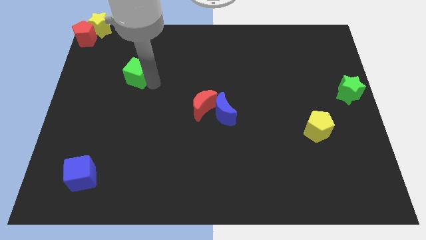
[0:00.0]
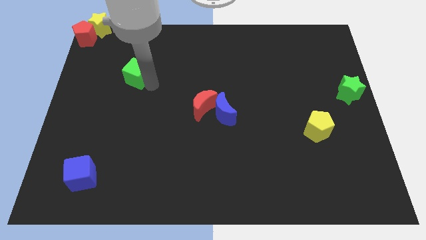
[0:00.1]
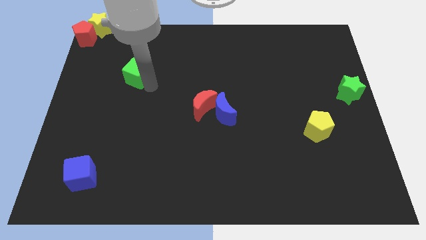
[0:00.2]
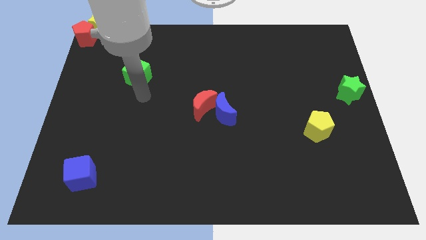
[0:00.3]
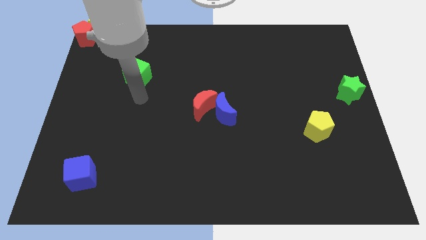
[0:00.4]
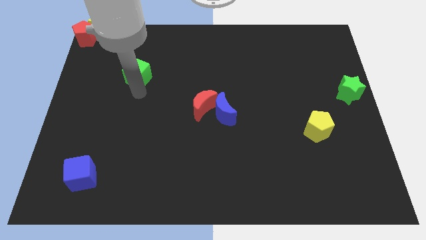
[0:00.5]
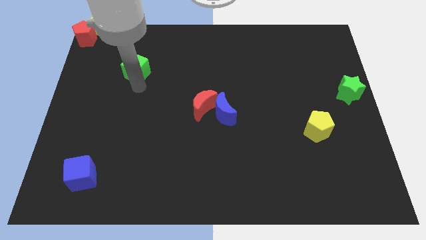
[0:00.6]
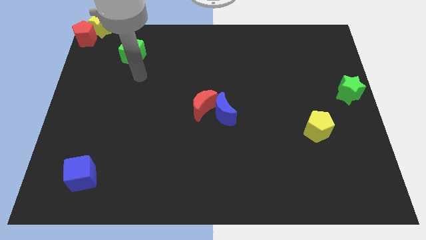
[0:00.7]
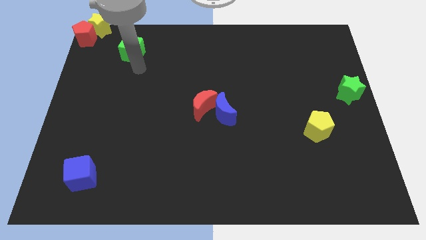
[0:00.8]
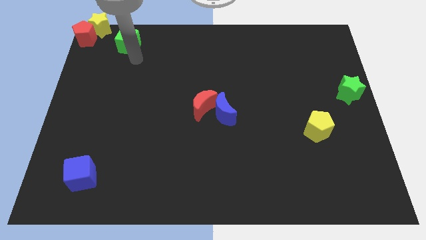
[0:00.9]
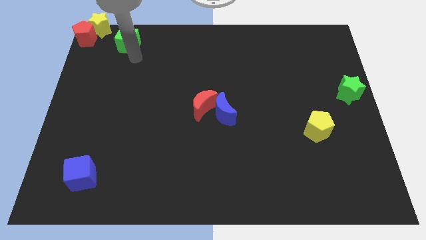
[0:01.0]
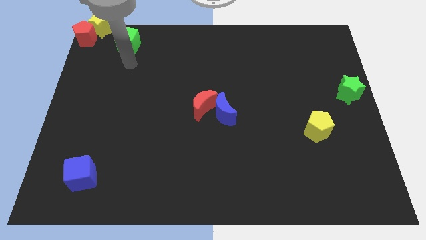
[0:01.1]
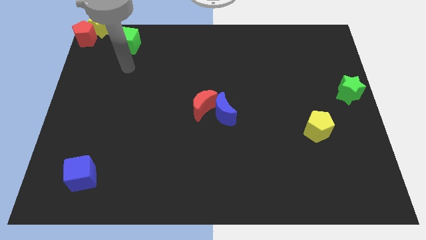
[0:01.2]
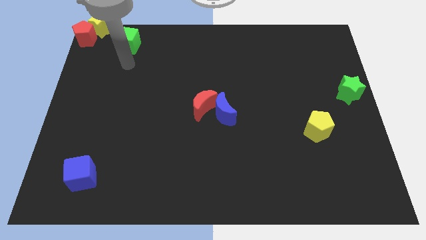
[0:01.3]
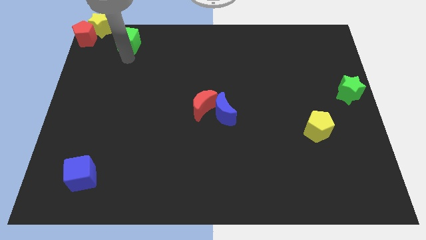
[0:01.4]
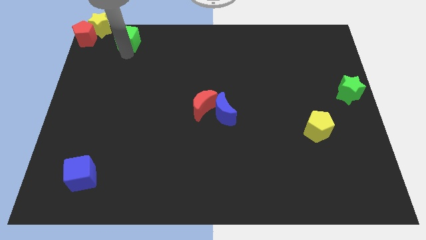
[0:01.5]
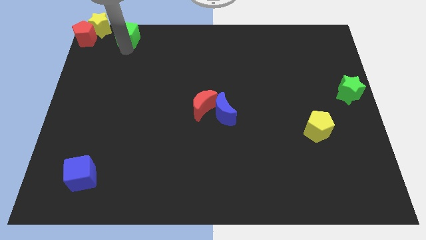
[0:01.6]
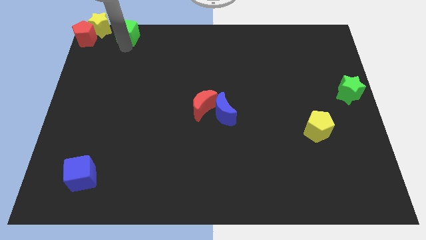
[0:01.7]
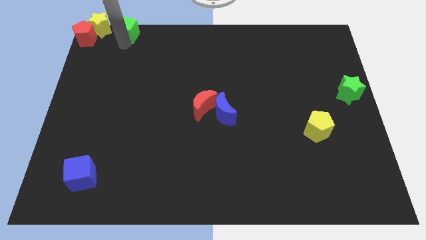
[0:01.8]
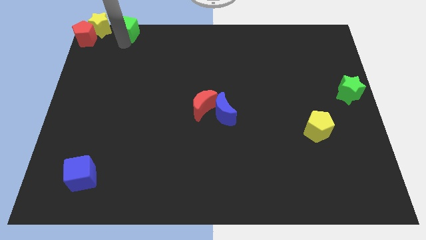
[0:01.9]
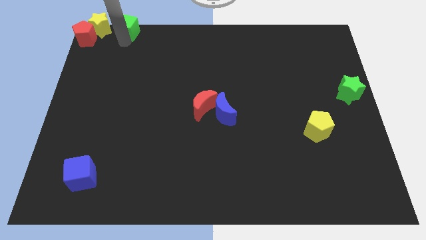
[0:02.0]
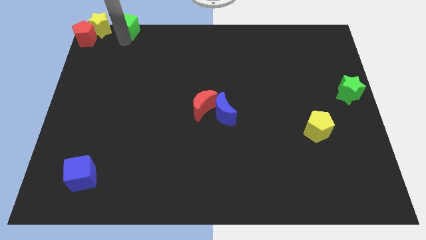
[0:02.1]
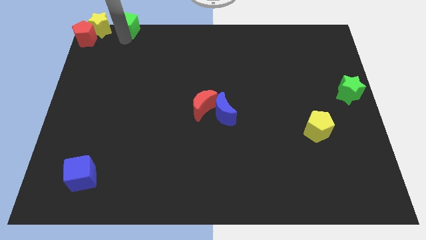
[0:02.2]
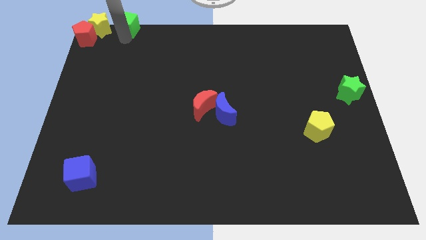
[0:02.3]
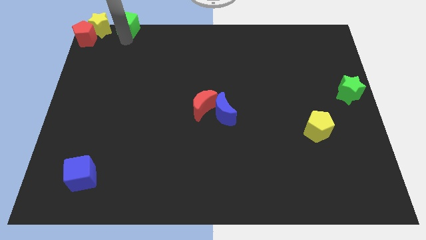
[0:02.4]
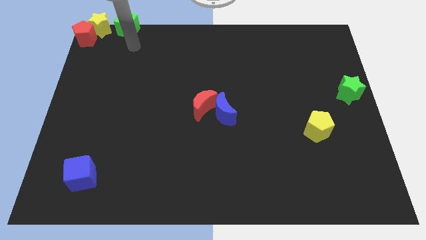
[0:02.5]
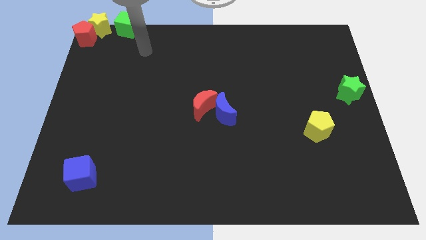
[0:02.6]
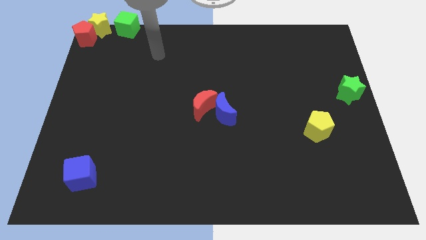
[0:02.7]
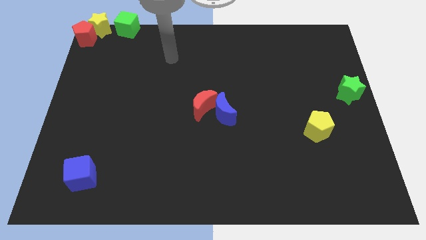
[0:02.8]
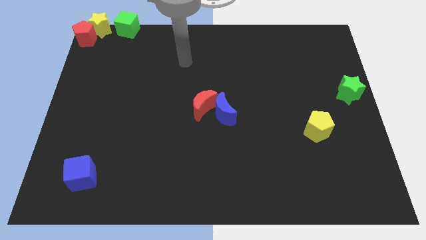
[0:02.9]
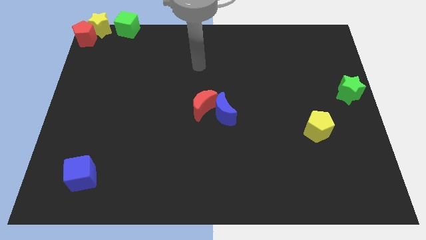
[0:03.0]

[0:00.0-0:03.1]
push the green cube close to the red yellow blocks

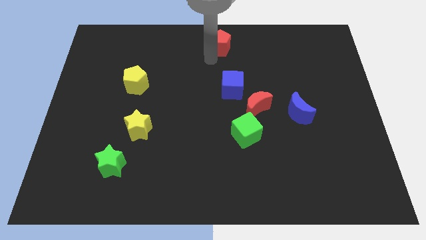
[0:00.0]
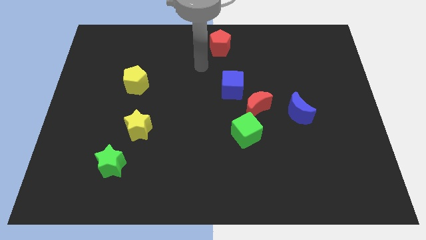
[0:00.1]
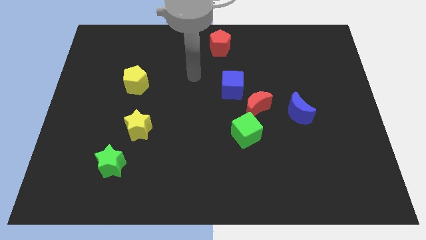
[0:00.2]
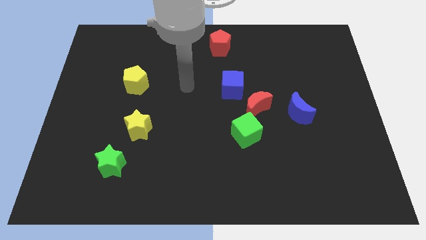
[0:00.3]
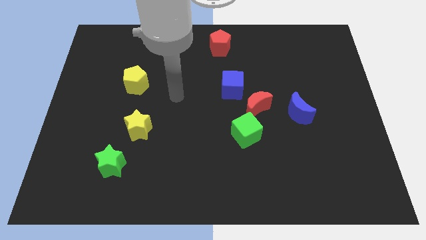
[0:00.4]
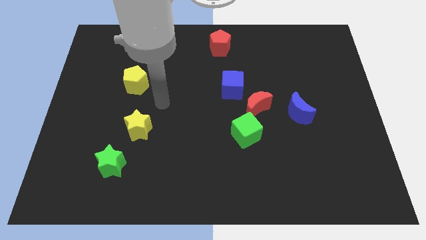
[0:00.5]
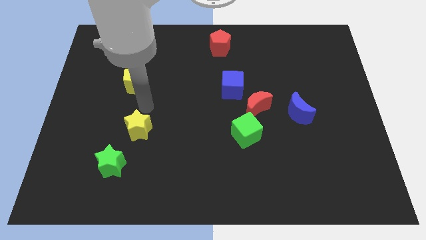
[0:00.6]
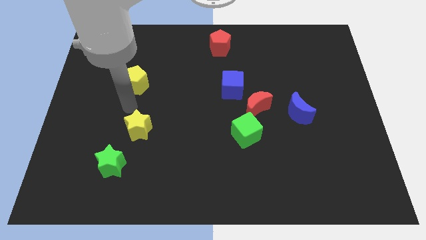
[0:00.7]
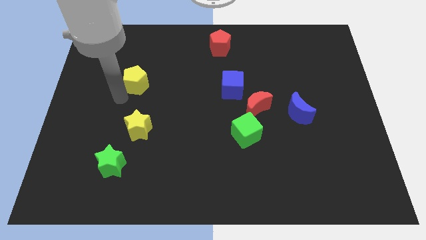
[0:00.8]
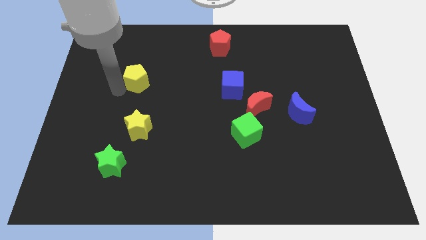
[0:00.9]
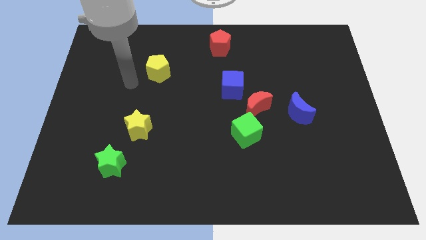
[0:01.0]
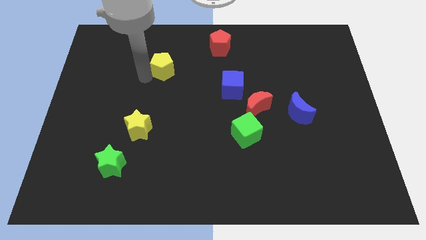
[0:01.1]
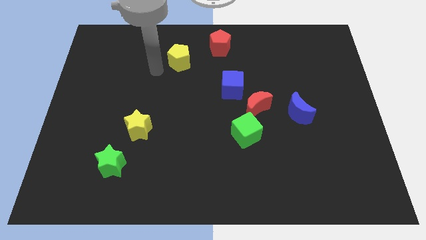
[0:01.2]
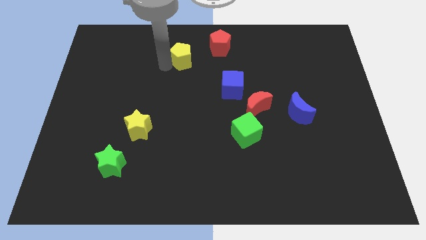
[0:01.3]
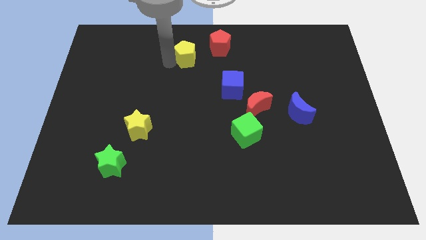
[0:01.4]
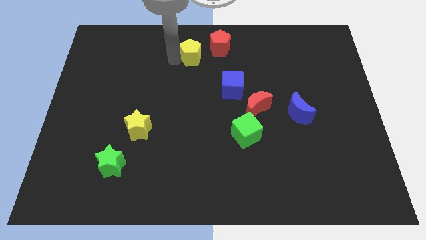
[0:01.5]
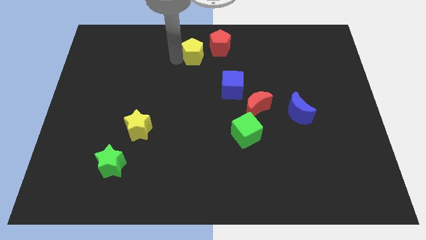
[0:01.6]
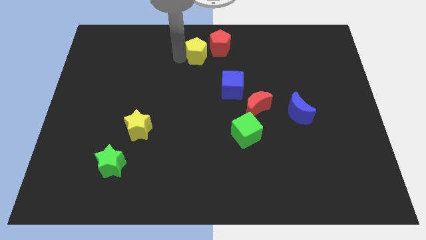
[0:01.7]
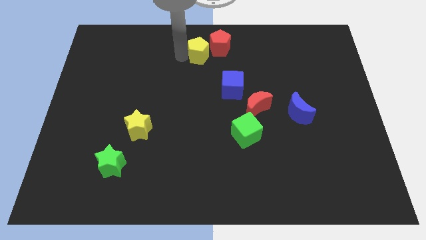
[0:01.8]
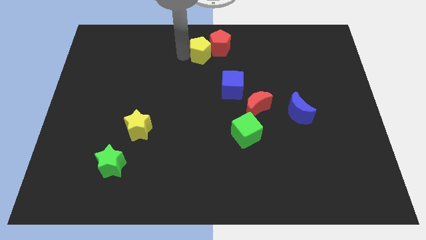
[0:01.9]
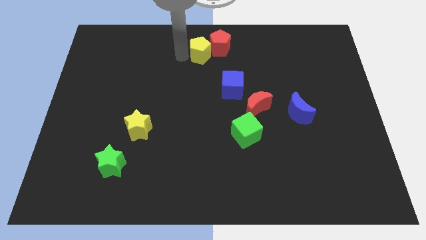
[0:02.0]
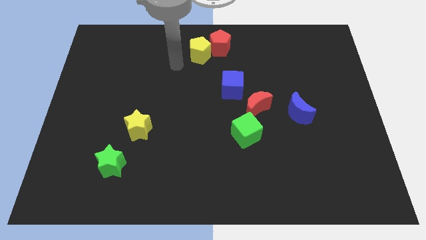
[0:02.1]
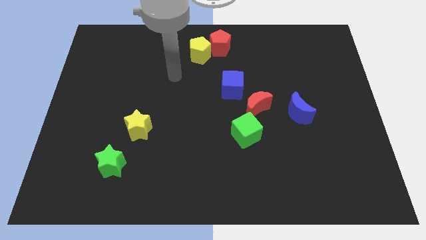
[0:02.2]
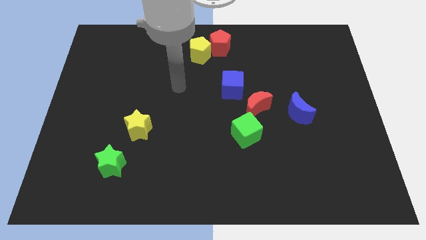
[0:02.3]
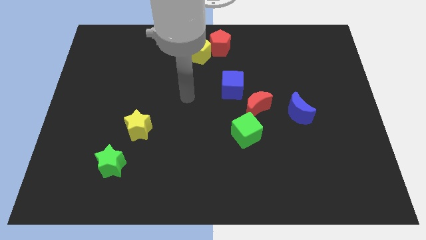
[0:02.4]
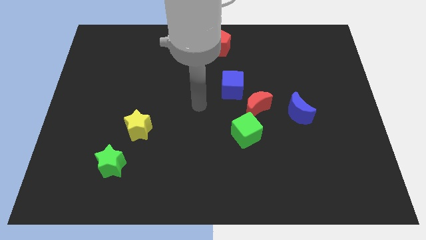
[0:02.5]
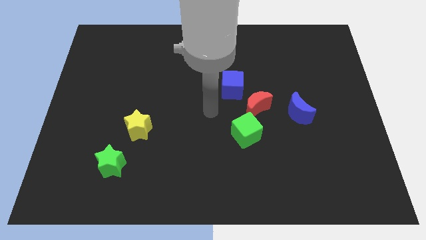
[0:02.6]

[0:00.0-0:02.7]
place the yellow pentagon to the left of red pentagon

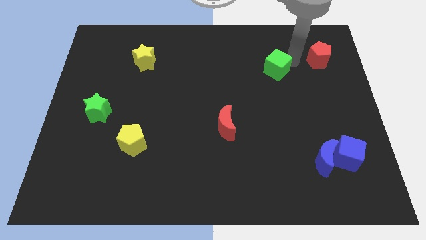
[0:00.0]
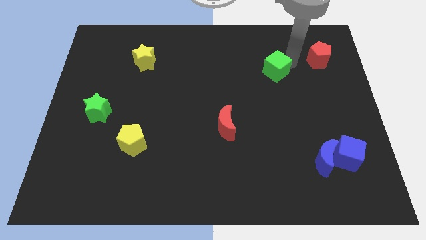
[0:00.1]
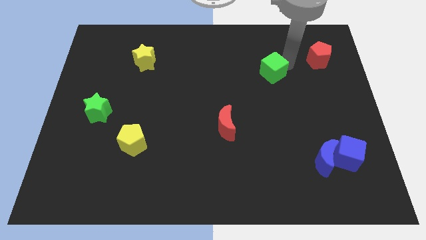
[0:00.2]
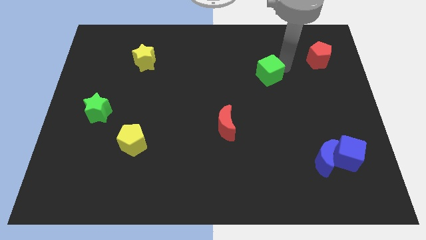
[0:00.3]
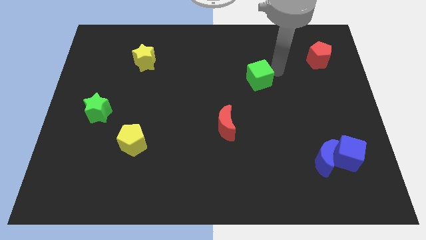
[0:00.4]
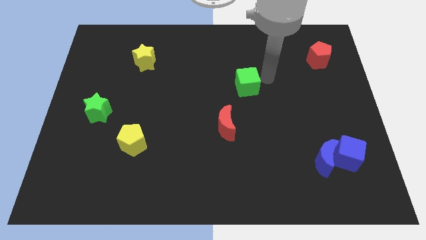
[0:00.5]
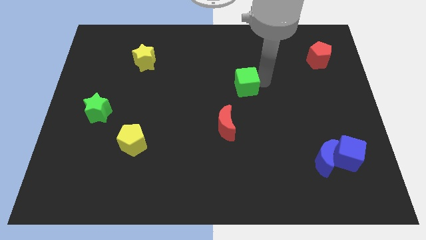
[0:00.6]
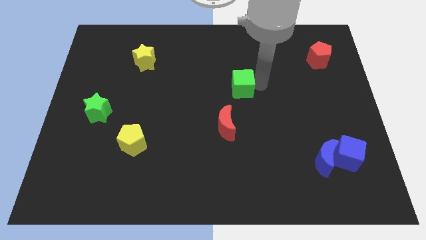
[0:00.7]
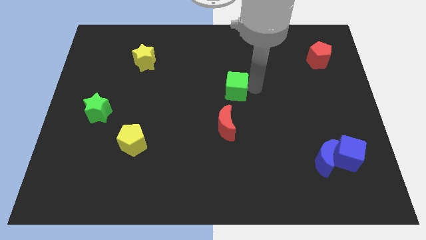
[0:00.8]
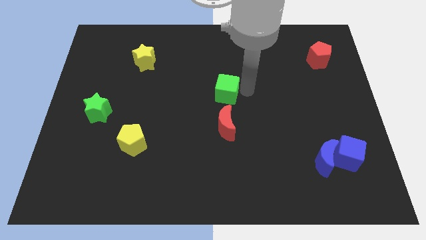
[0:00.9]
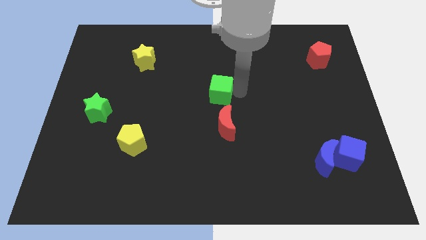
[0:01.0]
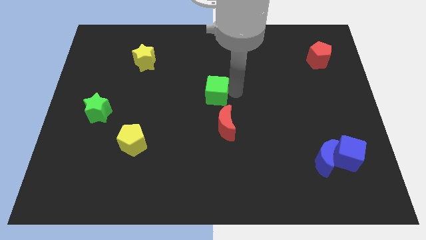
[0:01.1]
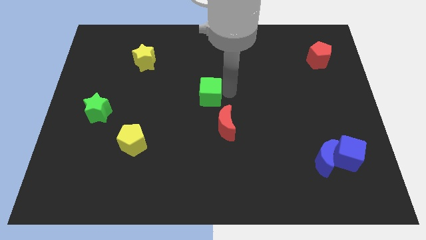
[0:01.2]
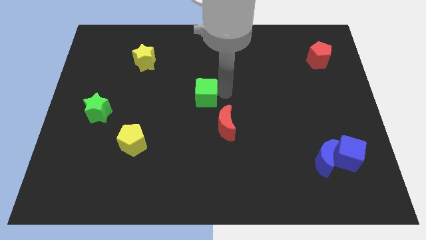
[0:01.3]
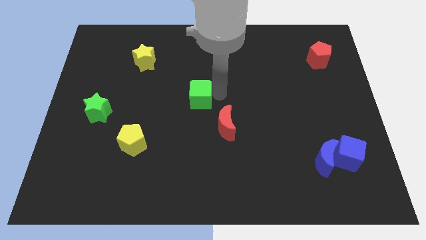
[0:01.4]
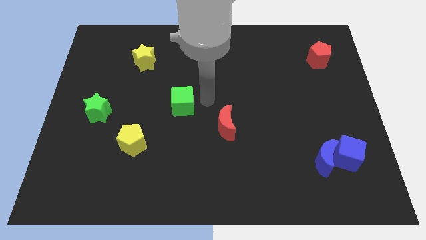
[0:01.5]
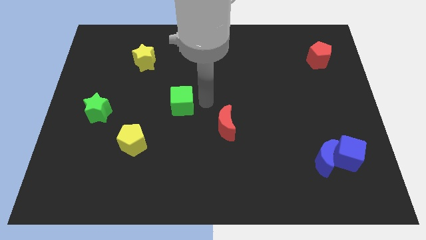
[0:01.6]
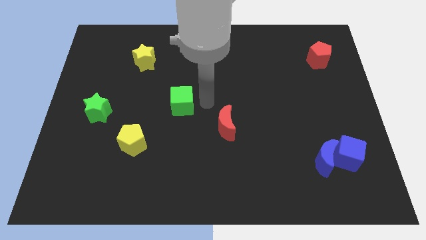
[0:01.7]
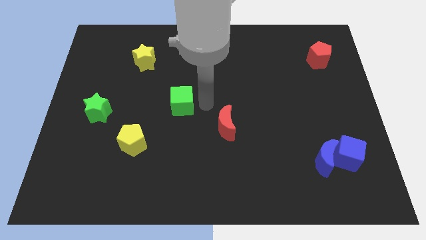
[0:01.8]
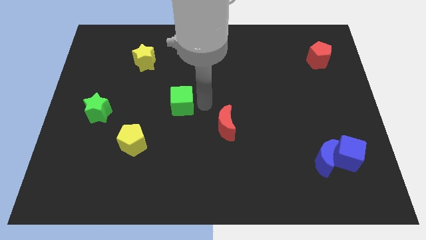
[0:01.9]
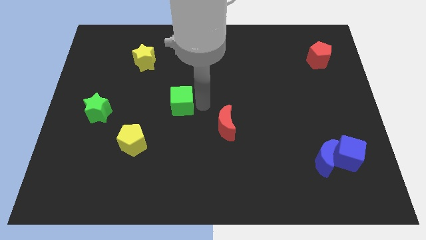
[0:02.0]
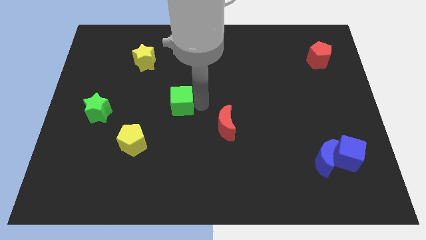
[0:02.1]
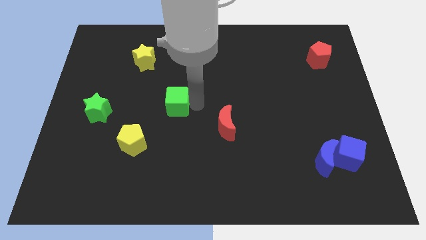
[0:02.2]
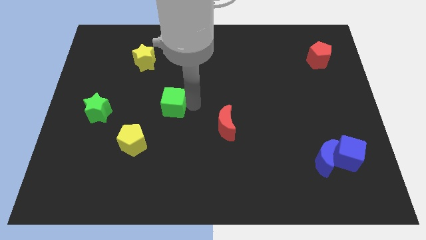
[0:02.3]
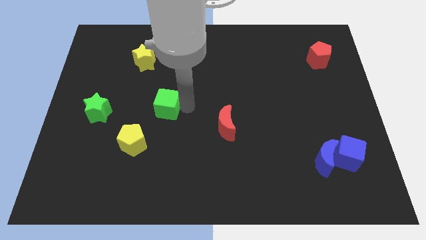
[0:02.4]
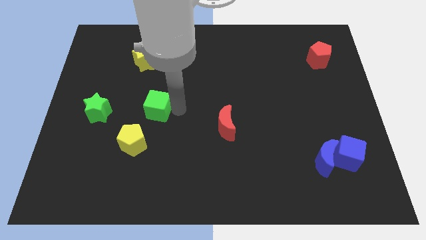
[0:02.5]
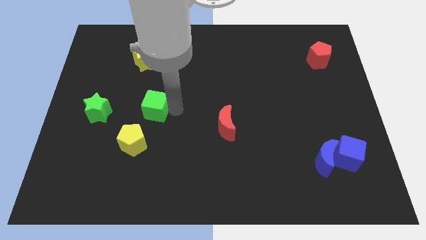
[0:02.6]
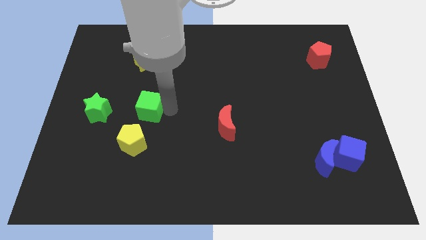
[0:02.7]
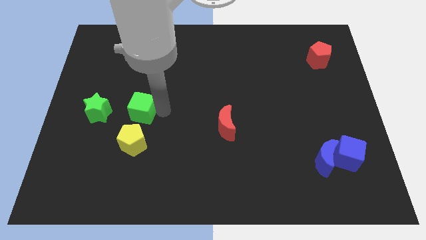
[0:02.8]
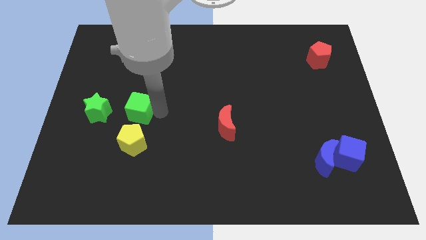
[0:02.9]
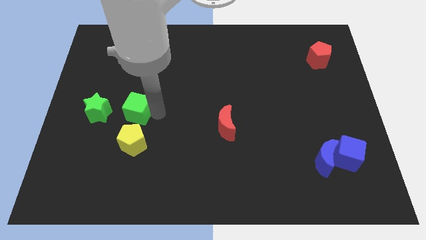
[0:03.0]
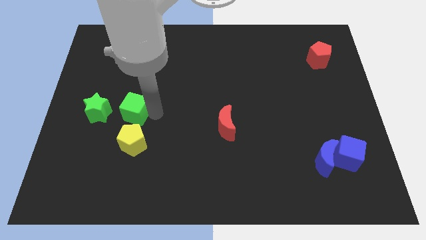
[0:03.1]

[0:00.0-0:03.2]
make a triangle out of blocks

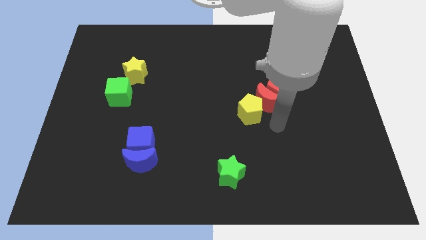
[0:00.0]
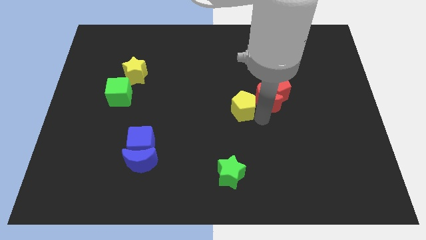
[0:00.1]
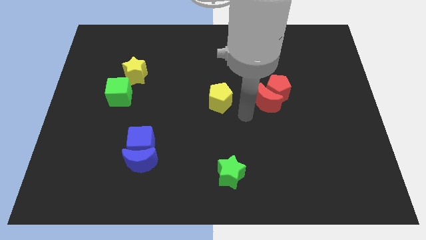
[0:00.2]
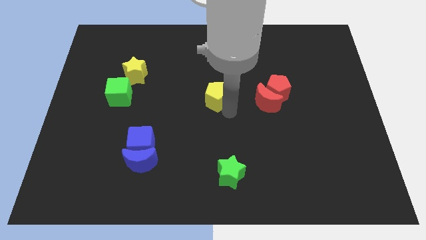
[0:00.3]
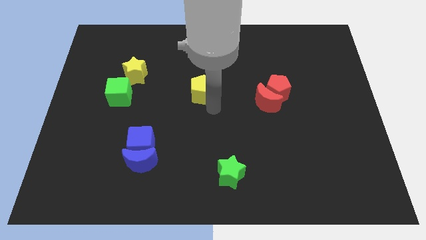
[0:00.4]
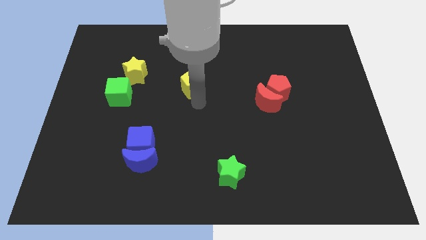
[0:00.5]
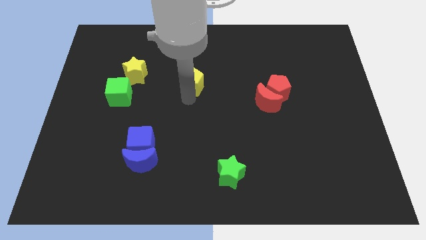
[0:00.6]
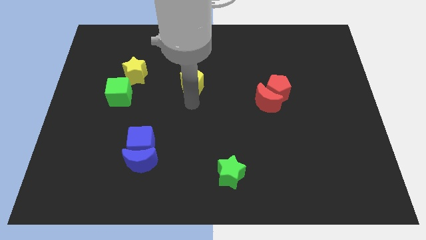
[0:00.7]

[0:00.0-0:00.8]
place the yellow pentagon at the center of the board
